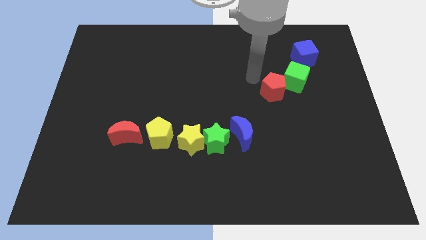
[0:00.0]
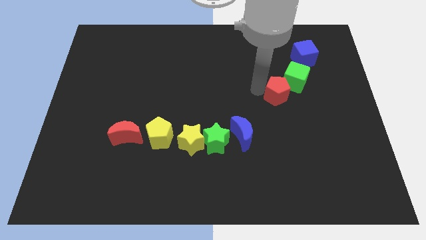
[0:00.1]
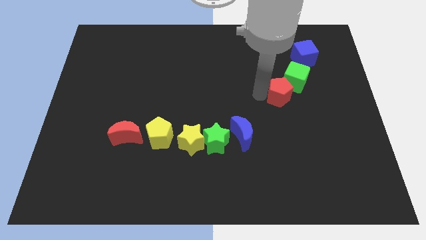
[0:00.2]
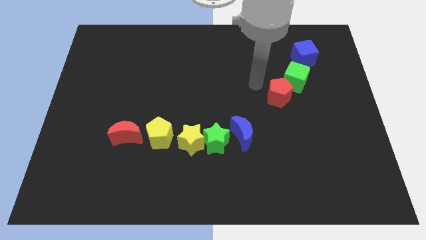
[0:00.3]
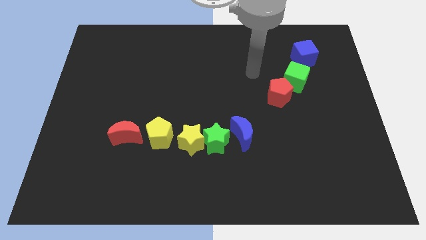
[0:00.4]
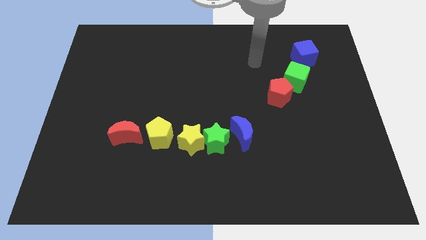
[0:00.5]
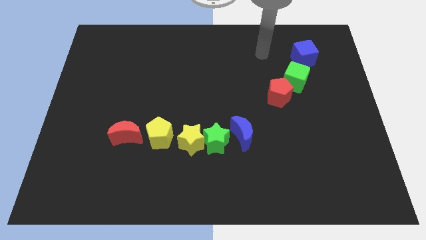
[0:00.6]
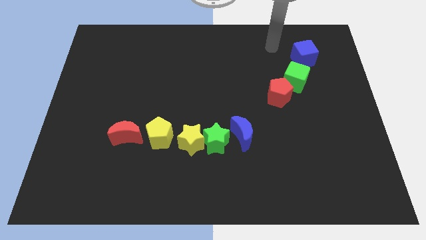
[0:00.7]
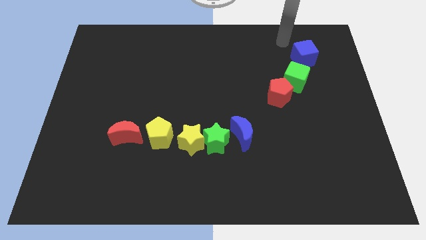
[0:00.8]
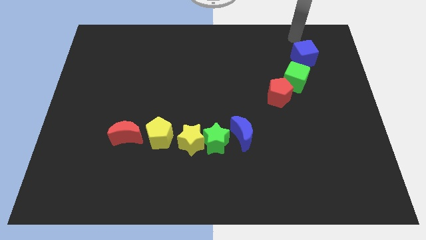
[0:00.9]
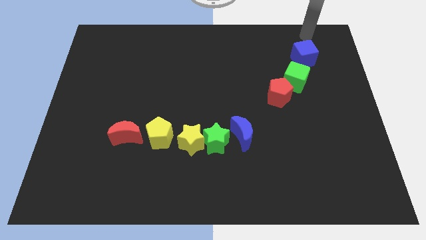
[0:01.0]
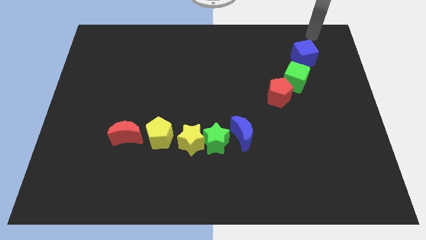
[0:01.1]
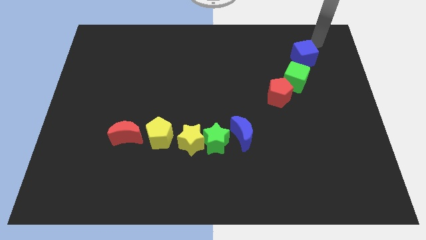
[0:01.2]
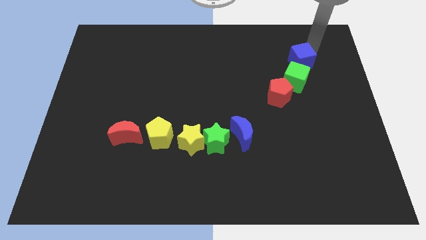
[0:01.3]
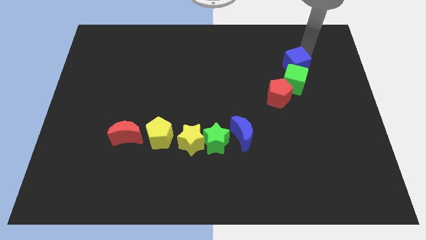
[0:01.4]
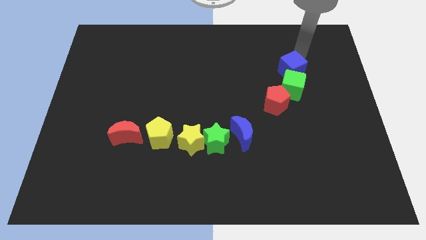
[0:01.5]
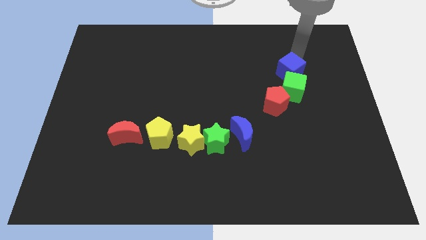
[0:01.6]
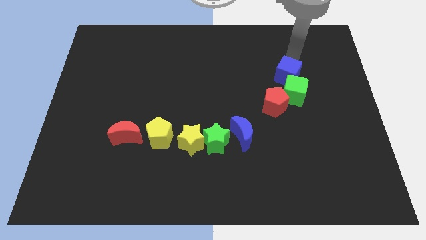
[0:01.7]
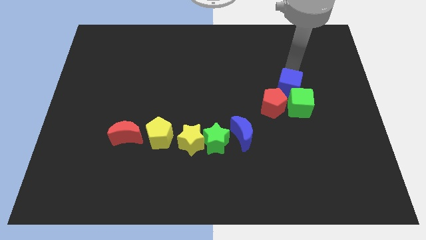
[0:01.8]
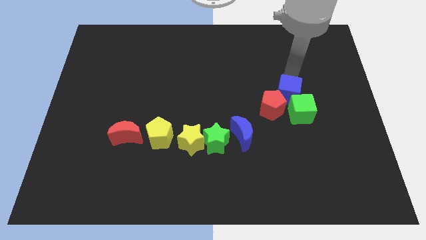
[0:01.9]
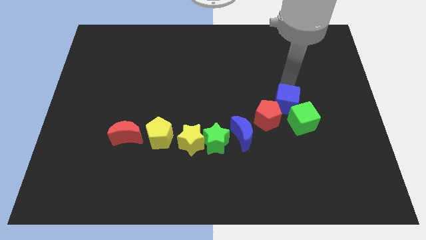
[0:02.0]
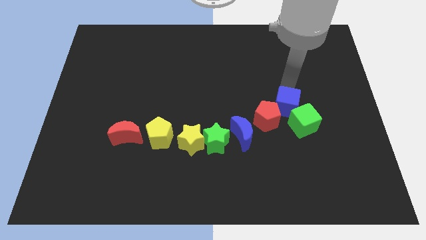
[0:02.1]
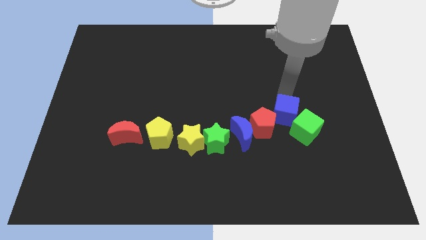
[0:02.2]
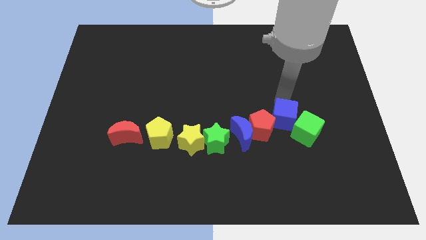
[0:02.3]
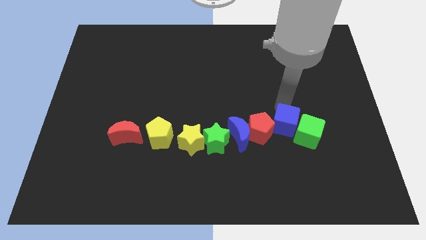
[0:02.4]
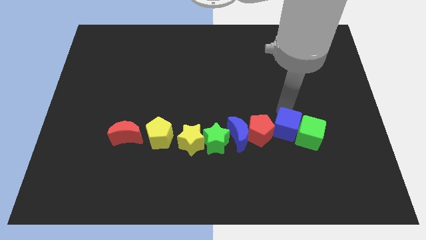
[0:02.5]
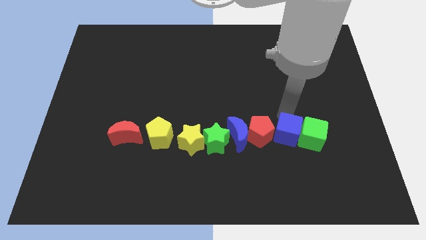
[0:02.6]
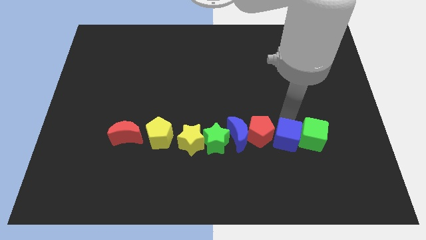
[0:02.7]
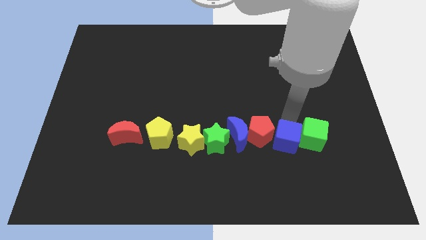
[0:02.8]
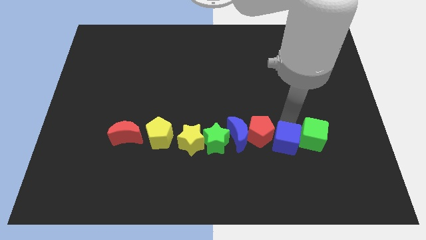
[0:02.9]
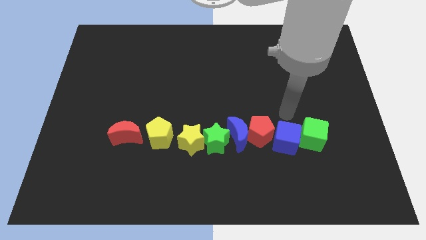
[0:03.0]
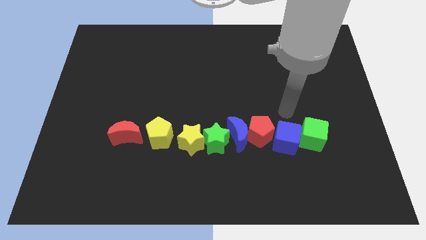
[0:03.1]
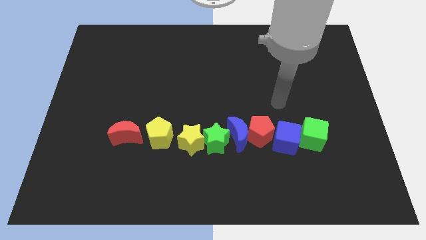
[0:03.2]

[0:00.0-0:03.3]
put the green cube blue cube and red pentagon parallel right to the blue moon

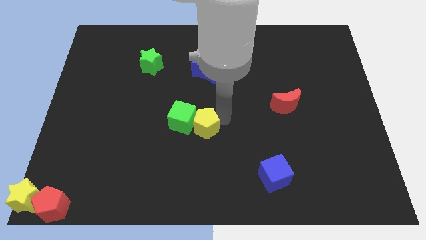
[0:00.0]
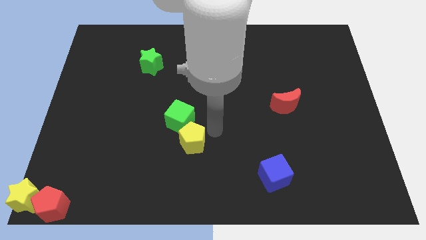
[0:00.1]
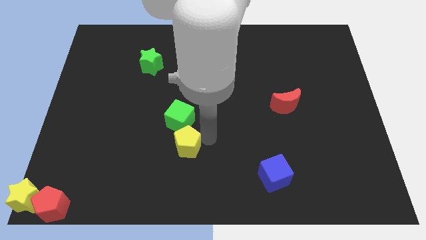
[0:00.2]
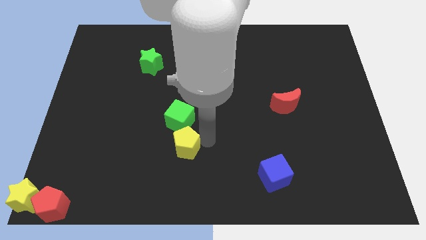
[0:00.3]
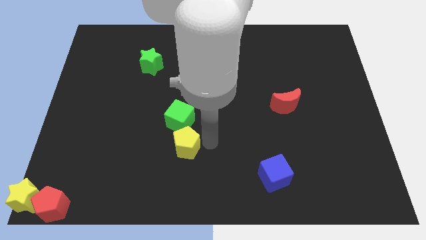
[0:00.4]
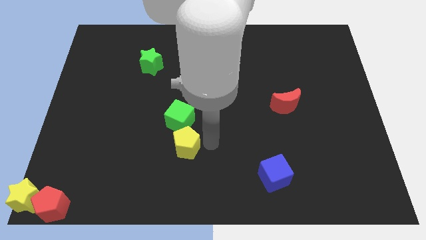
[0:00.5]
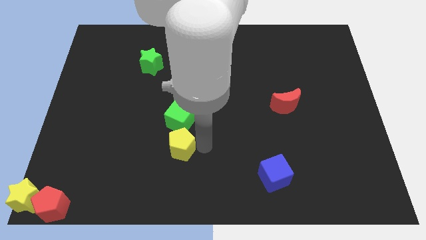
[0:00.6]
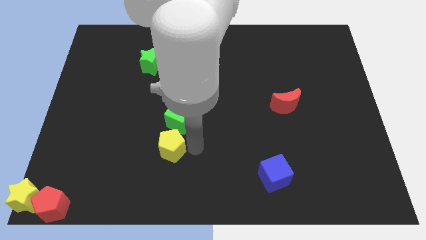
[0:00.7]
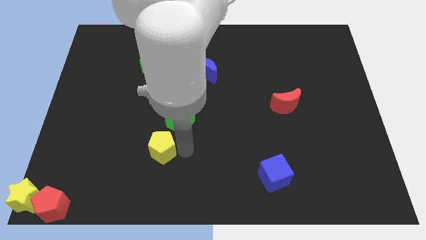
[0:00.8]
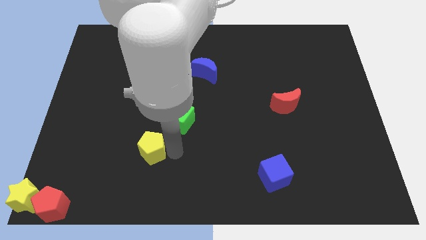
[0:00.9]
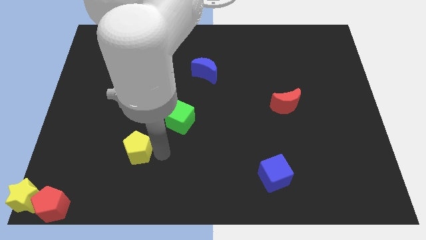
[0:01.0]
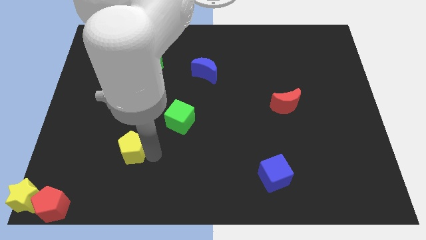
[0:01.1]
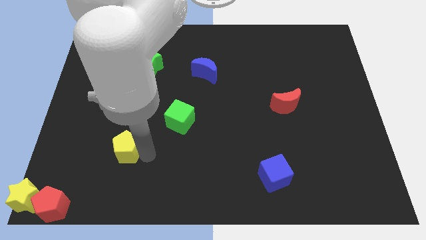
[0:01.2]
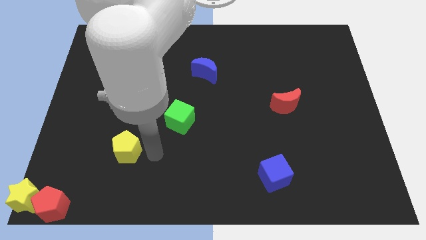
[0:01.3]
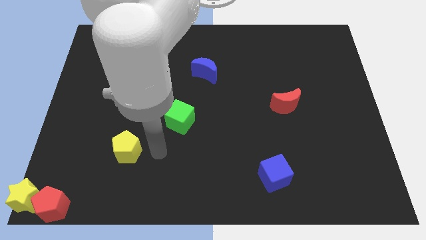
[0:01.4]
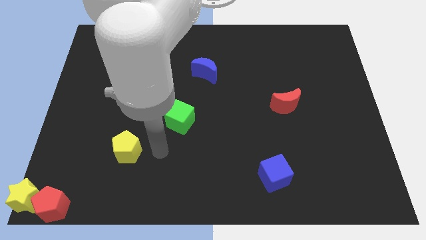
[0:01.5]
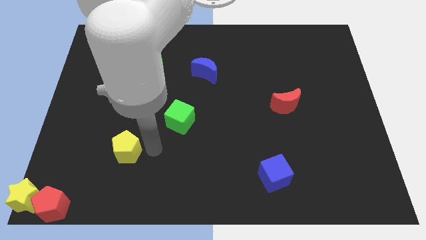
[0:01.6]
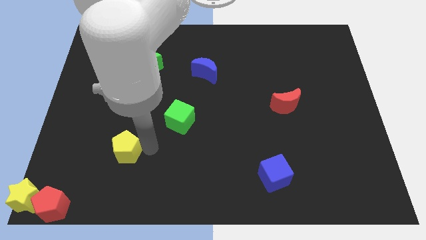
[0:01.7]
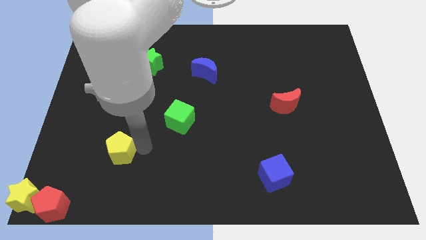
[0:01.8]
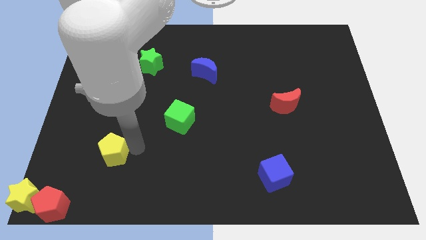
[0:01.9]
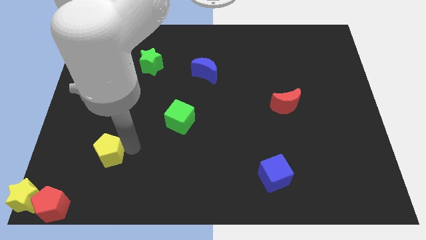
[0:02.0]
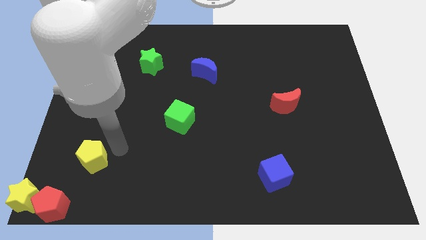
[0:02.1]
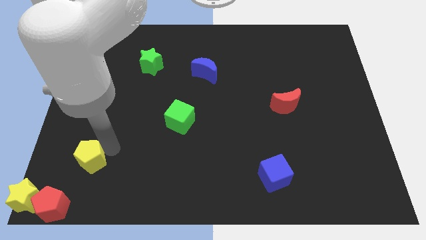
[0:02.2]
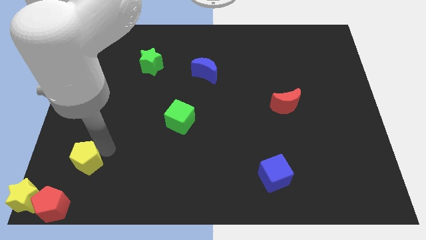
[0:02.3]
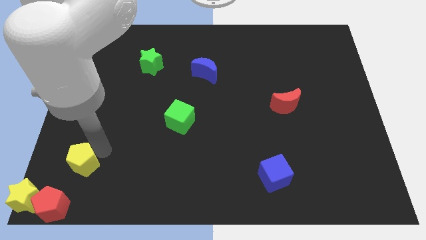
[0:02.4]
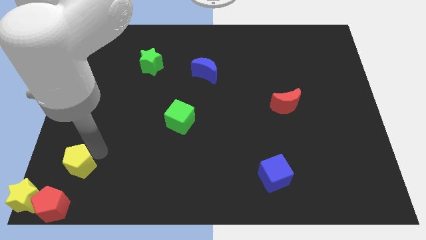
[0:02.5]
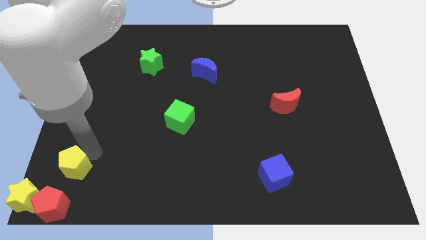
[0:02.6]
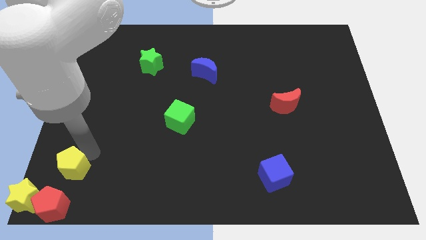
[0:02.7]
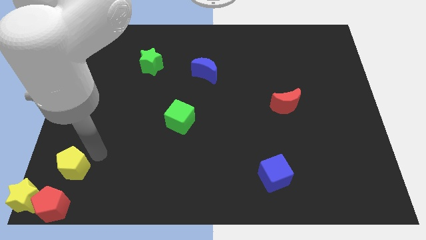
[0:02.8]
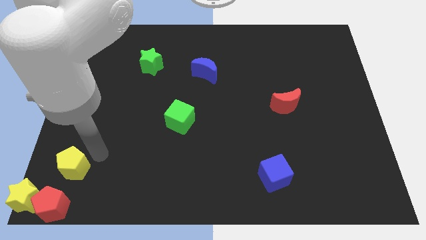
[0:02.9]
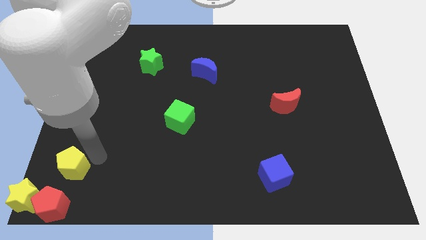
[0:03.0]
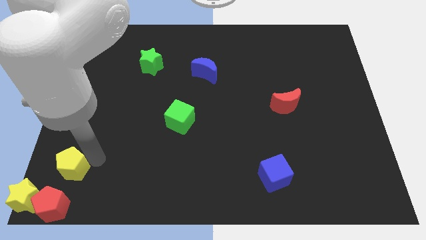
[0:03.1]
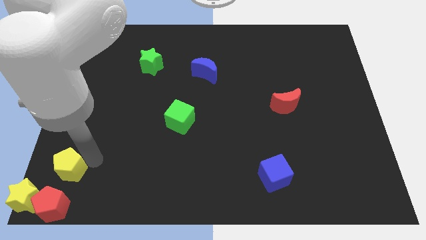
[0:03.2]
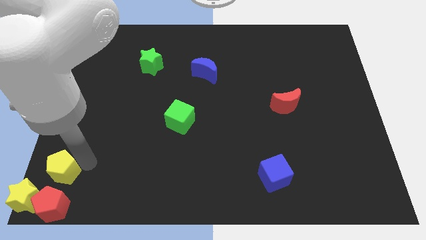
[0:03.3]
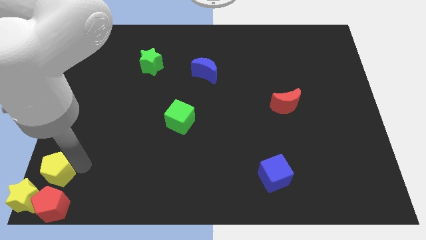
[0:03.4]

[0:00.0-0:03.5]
push the yellow pentagon to the top of the red pentagon

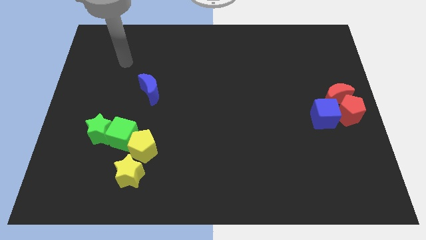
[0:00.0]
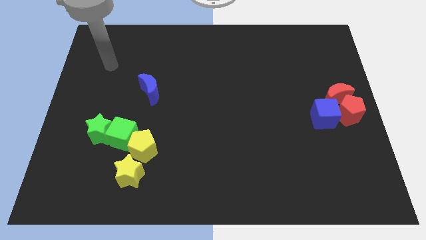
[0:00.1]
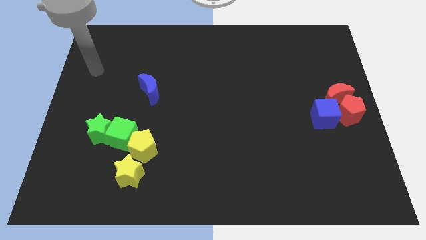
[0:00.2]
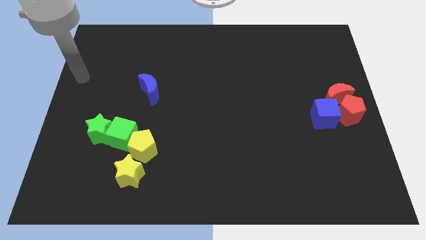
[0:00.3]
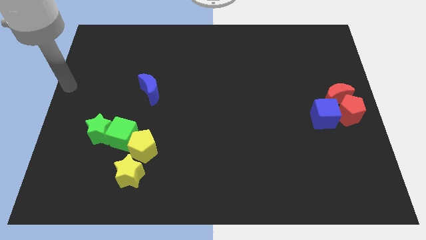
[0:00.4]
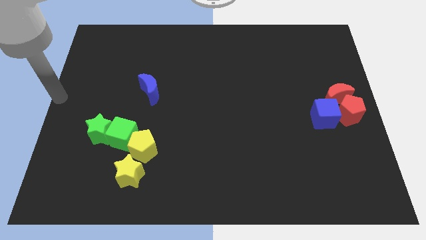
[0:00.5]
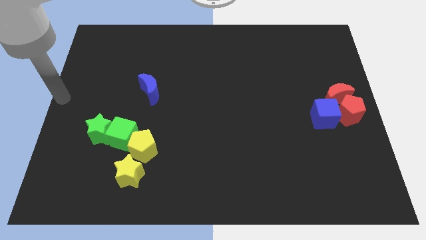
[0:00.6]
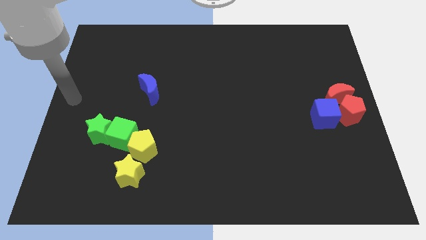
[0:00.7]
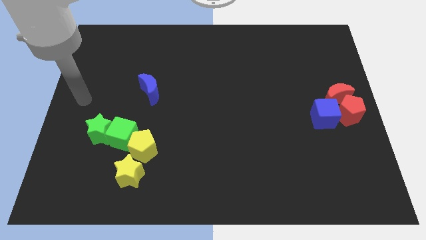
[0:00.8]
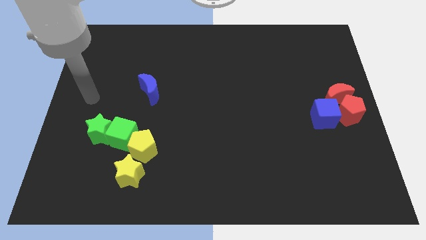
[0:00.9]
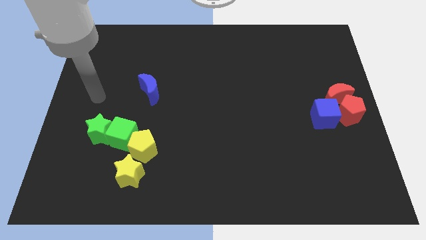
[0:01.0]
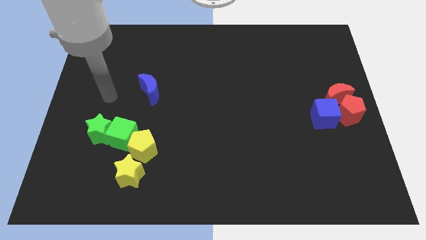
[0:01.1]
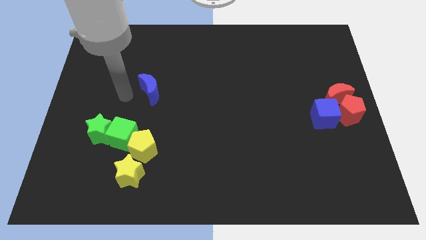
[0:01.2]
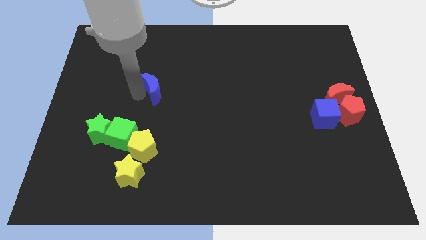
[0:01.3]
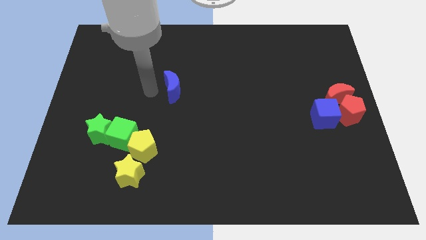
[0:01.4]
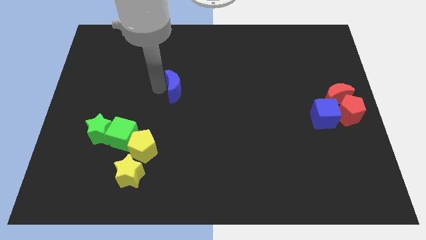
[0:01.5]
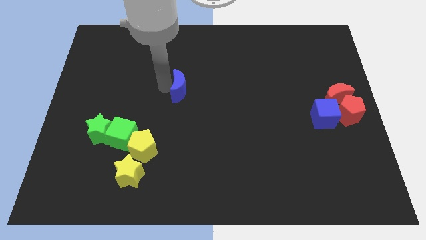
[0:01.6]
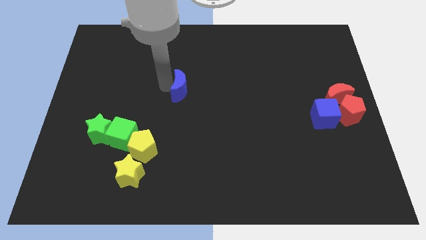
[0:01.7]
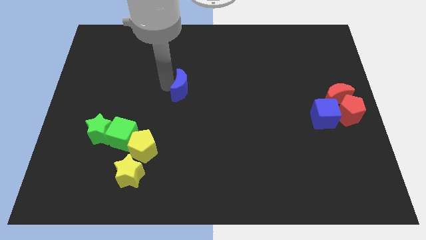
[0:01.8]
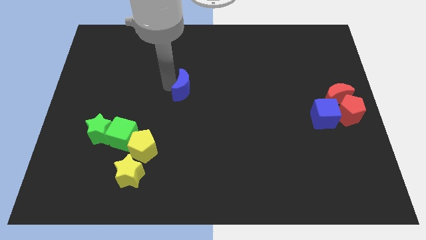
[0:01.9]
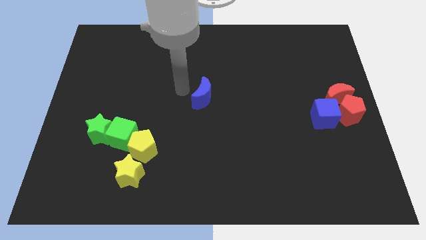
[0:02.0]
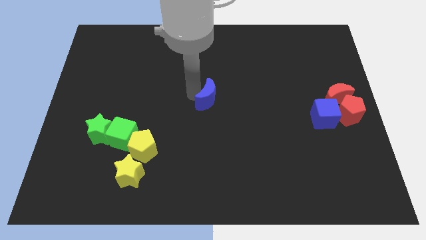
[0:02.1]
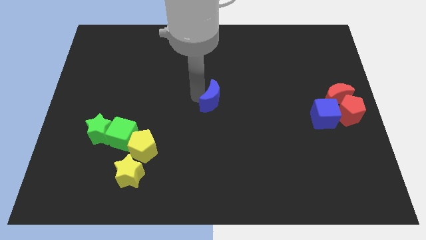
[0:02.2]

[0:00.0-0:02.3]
move the blue crescent to the center of the board

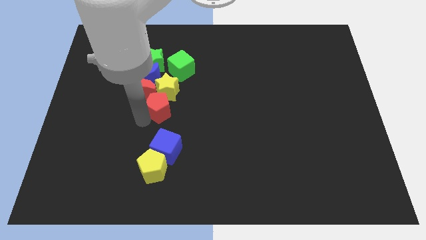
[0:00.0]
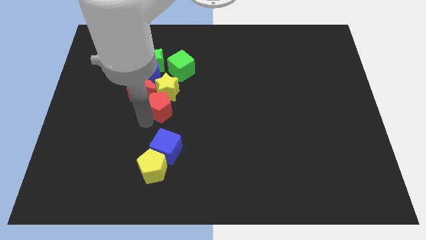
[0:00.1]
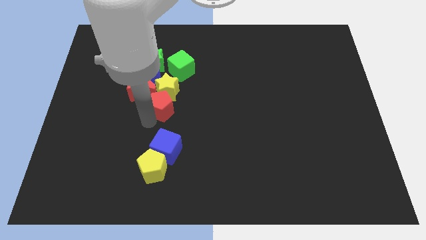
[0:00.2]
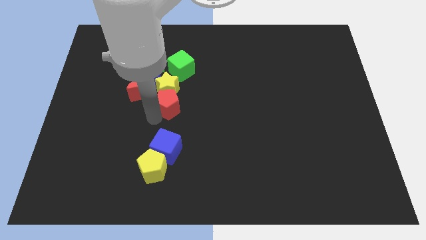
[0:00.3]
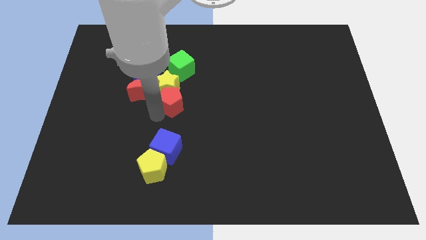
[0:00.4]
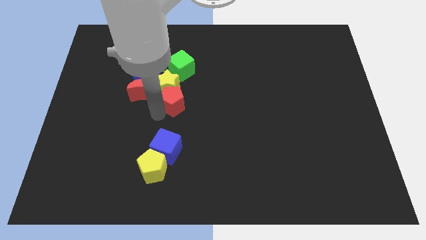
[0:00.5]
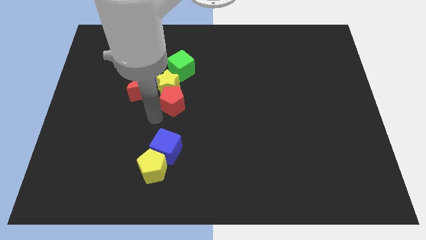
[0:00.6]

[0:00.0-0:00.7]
push the red pentagon into the yellow star
